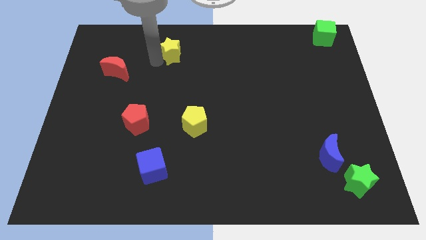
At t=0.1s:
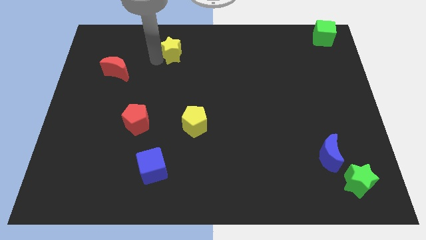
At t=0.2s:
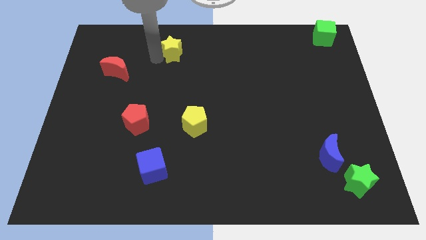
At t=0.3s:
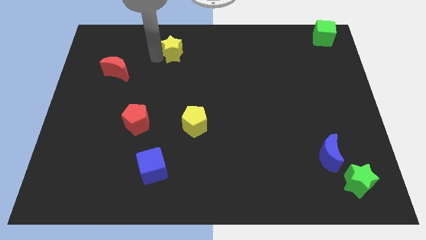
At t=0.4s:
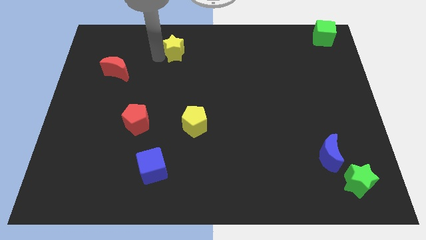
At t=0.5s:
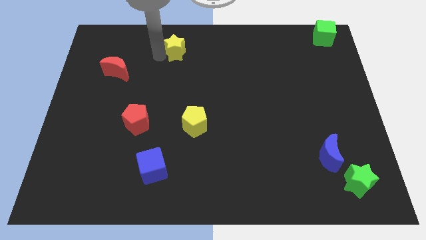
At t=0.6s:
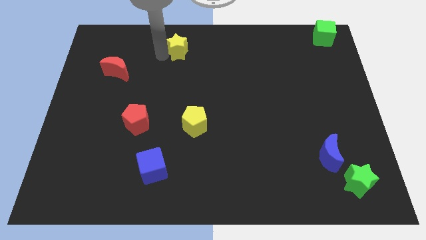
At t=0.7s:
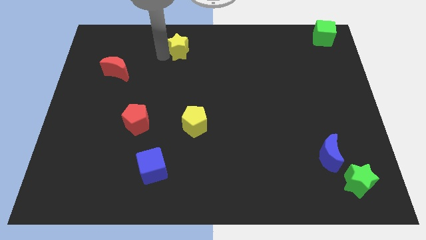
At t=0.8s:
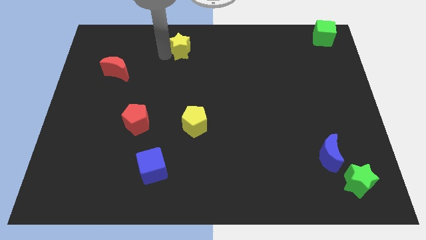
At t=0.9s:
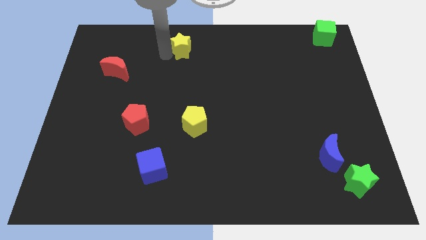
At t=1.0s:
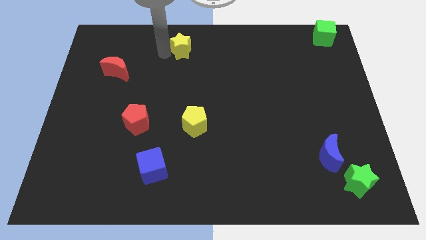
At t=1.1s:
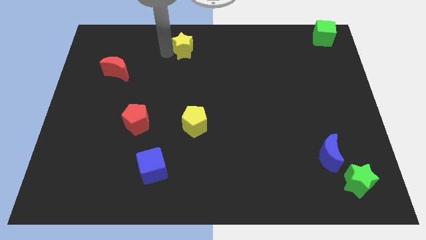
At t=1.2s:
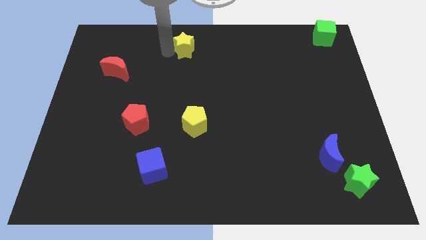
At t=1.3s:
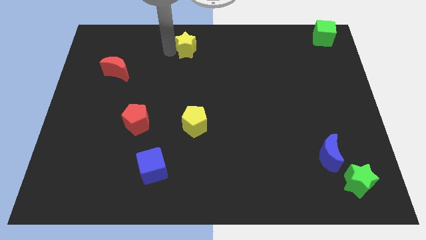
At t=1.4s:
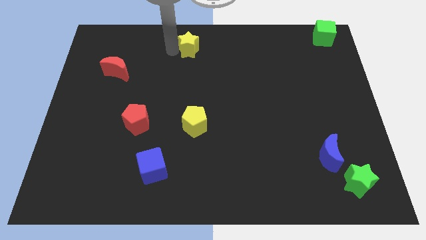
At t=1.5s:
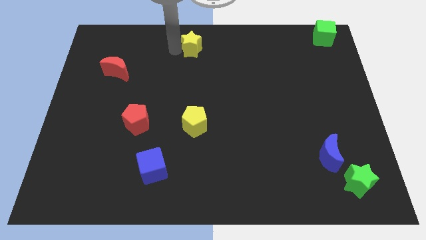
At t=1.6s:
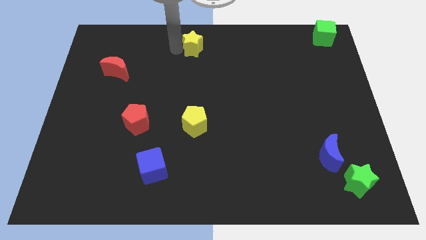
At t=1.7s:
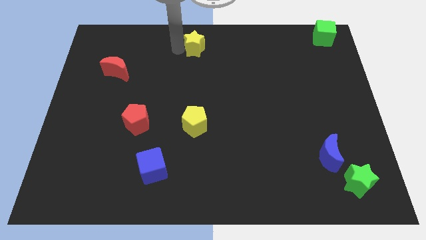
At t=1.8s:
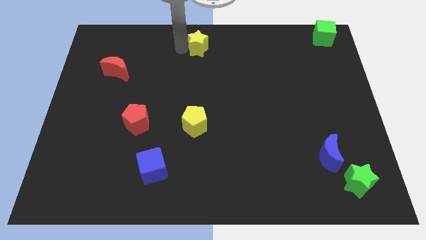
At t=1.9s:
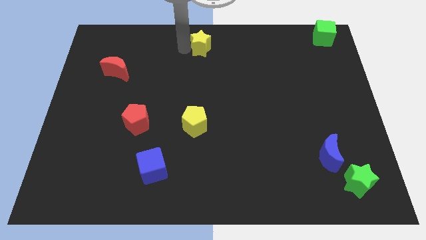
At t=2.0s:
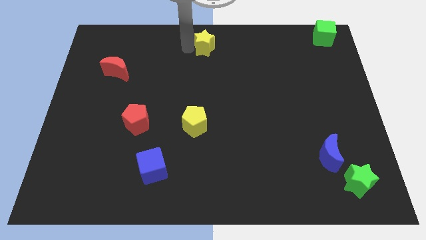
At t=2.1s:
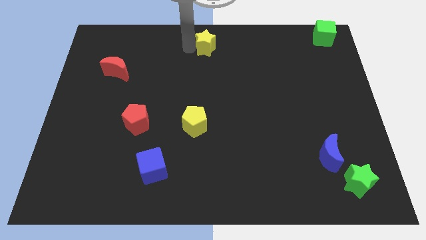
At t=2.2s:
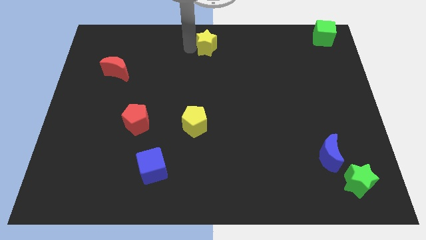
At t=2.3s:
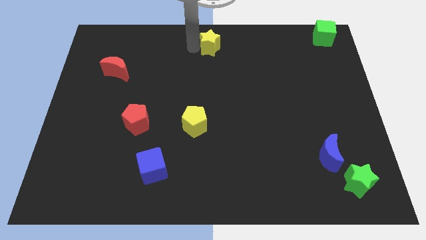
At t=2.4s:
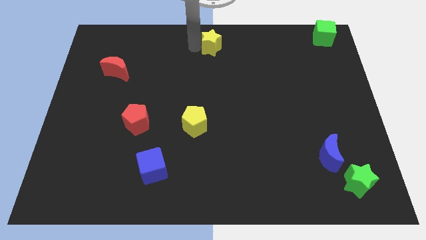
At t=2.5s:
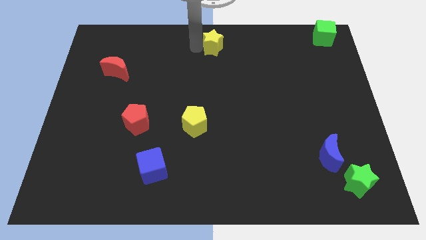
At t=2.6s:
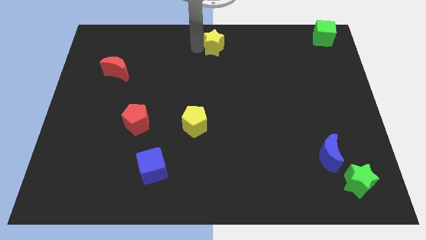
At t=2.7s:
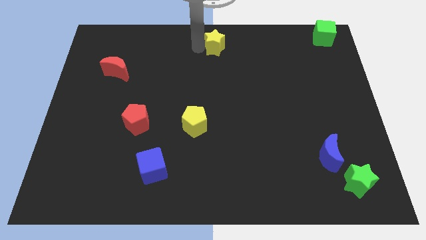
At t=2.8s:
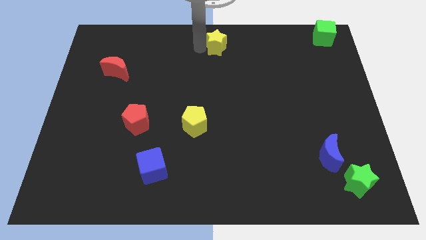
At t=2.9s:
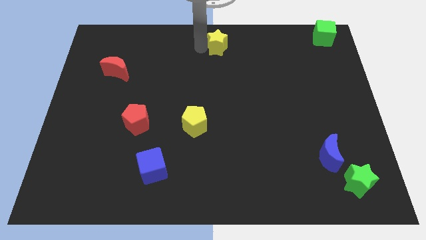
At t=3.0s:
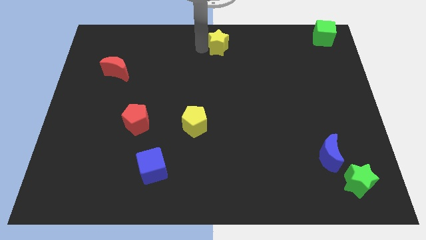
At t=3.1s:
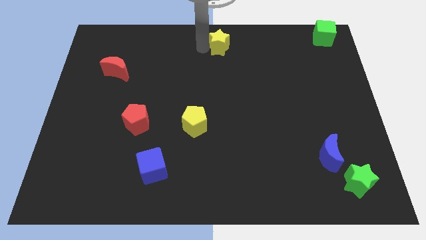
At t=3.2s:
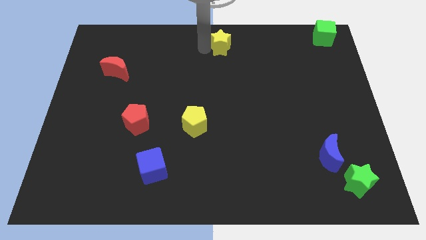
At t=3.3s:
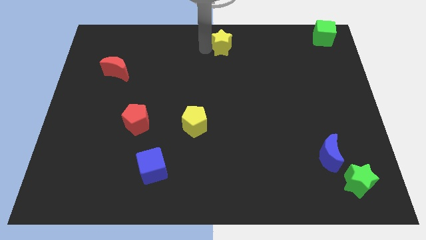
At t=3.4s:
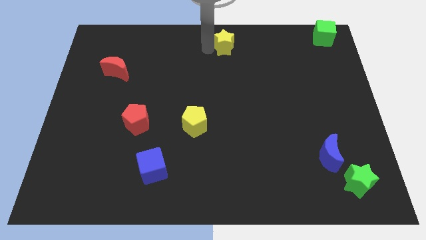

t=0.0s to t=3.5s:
push yellow star to the top middle of the board

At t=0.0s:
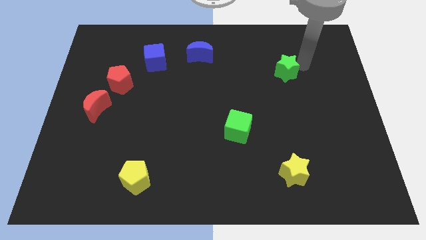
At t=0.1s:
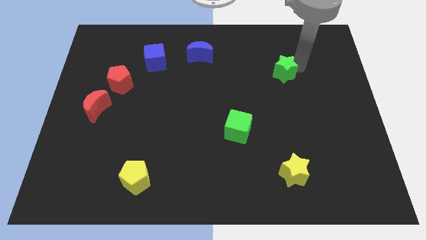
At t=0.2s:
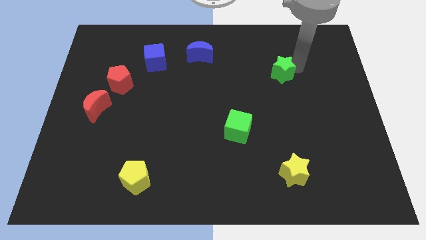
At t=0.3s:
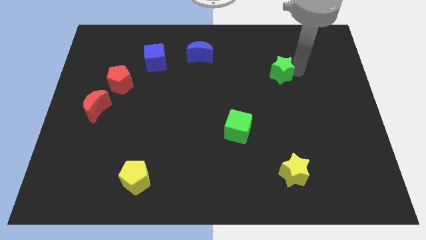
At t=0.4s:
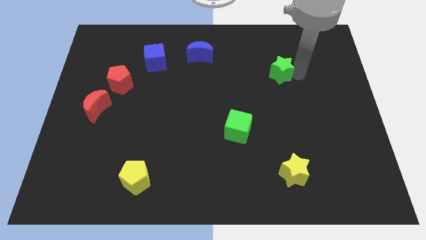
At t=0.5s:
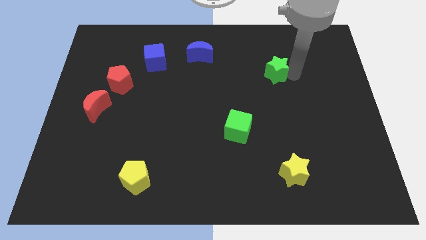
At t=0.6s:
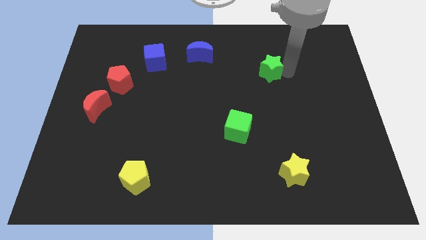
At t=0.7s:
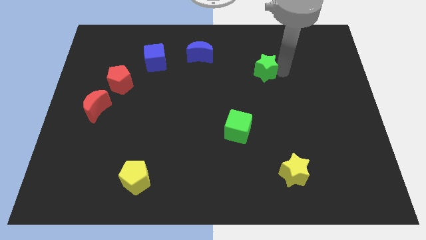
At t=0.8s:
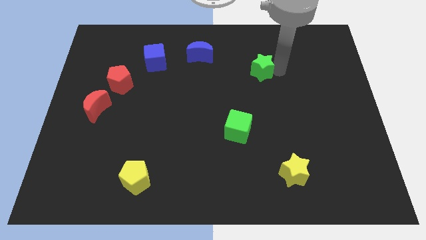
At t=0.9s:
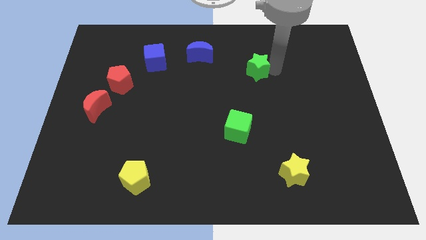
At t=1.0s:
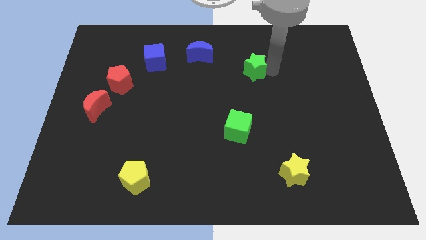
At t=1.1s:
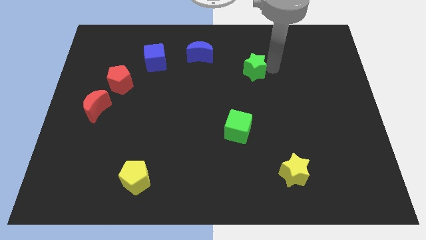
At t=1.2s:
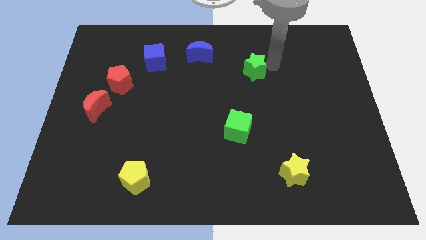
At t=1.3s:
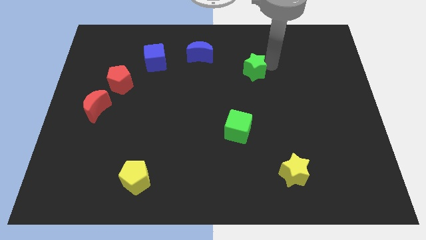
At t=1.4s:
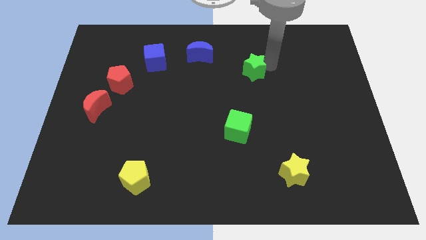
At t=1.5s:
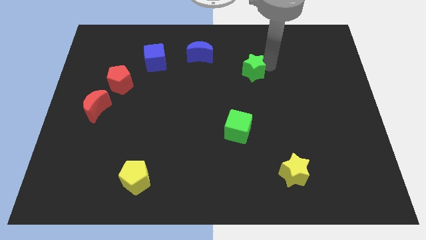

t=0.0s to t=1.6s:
move green star slightly to the center of the board

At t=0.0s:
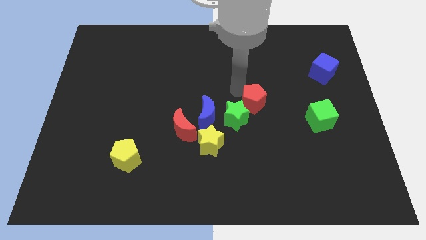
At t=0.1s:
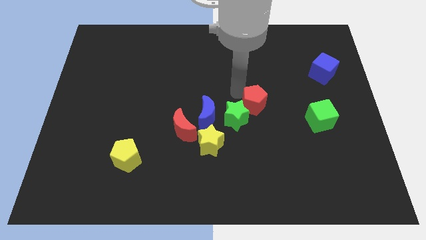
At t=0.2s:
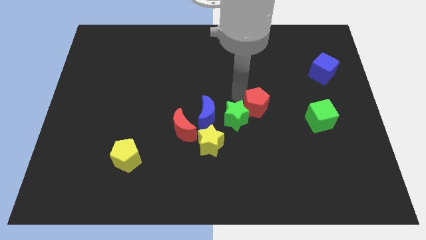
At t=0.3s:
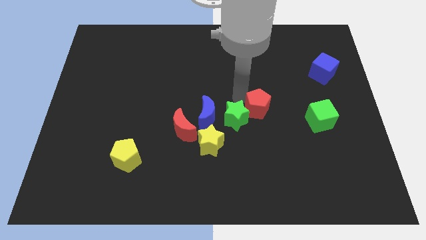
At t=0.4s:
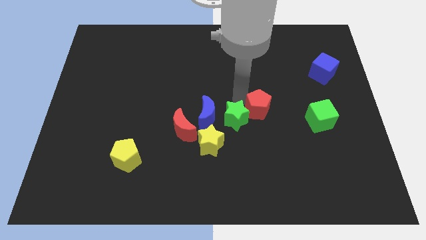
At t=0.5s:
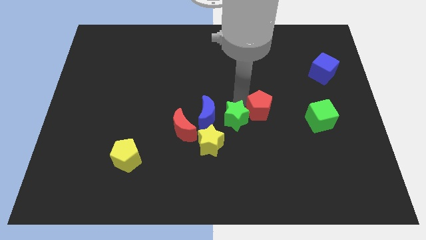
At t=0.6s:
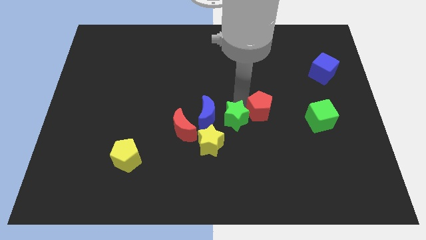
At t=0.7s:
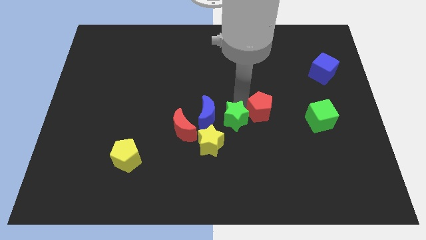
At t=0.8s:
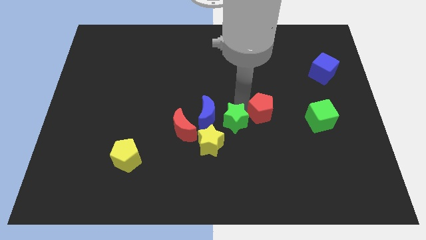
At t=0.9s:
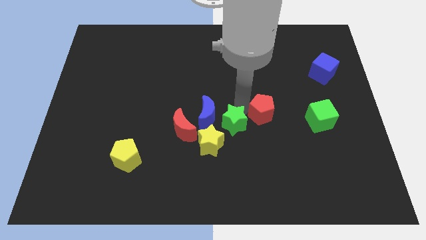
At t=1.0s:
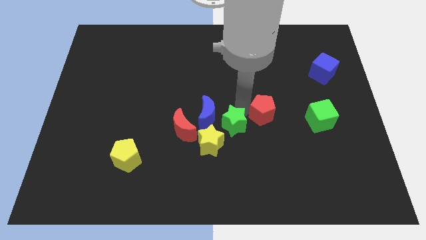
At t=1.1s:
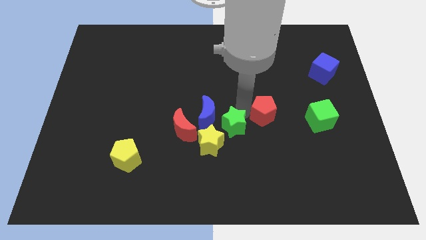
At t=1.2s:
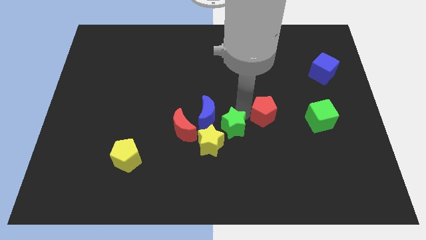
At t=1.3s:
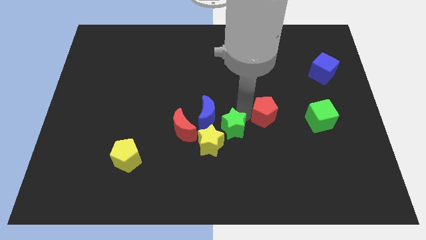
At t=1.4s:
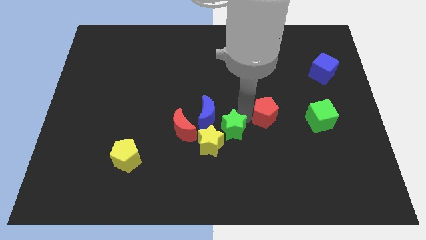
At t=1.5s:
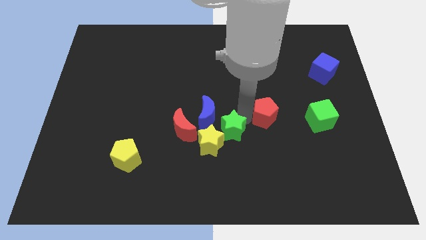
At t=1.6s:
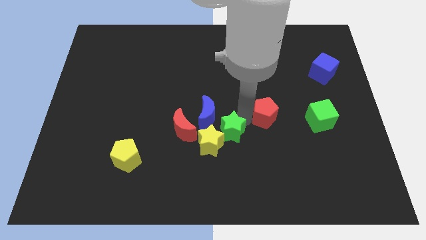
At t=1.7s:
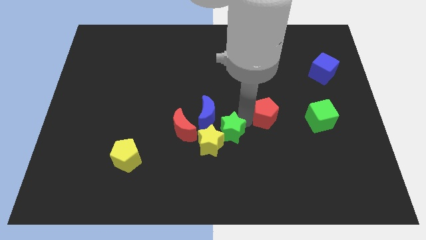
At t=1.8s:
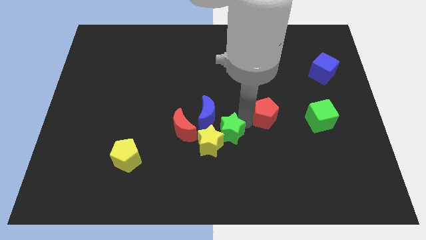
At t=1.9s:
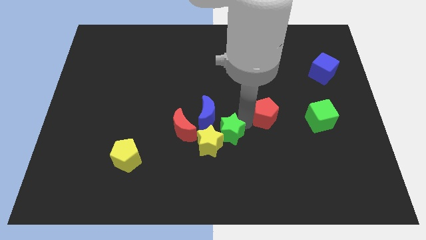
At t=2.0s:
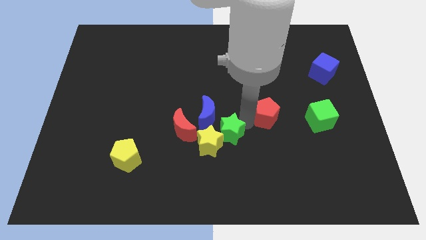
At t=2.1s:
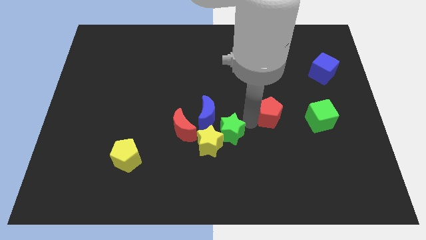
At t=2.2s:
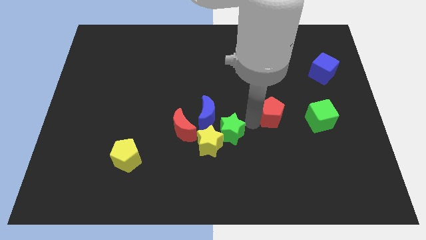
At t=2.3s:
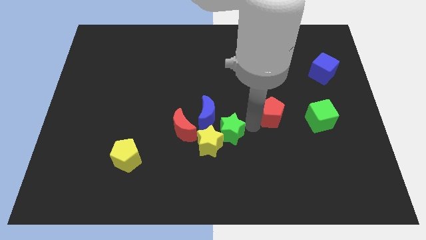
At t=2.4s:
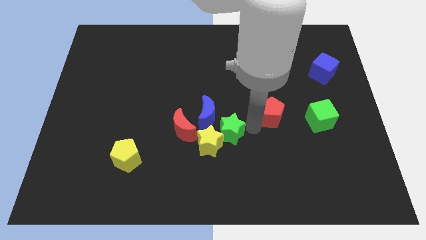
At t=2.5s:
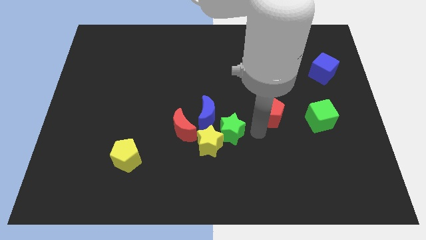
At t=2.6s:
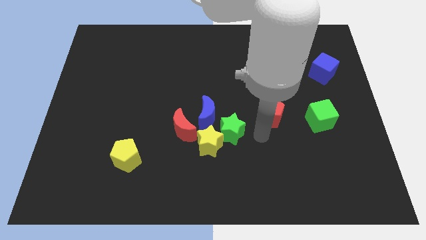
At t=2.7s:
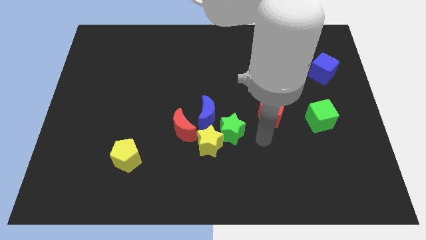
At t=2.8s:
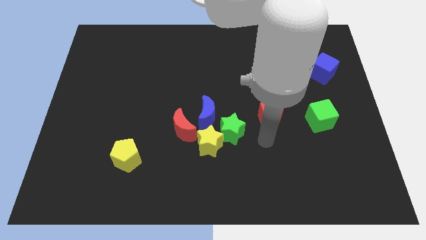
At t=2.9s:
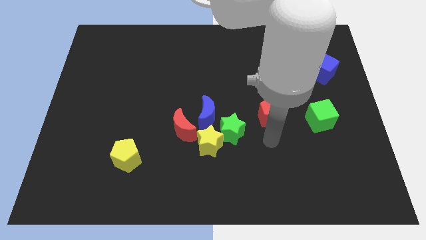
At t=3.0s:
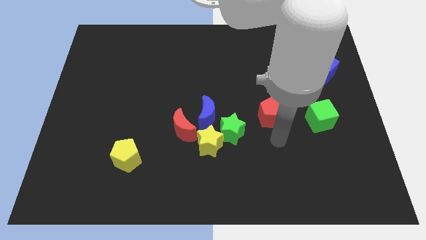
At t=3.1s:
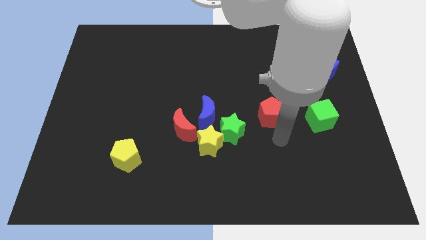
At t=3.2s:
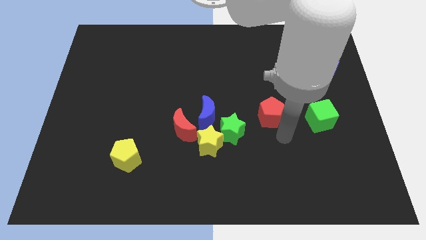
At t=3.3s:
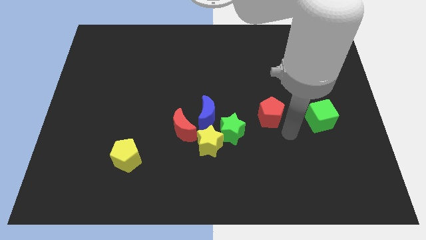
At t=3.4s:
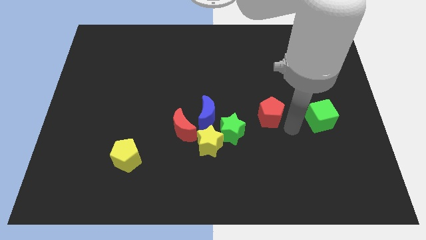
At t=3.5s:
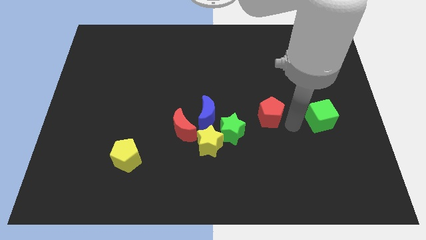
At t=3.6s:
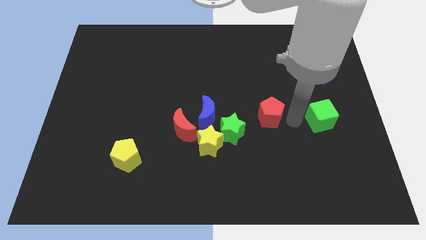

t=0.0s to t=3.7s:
separate the red pentagon and green star from each other

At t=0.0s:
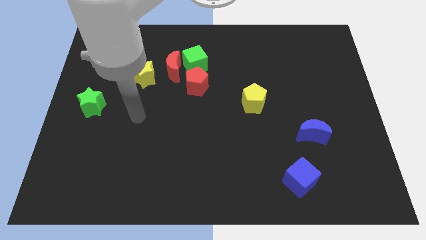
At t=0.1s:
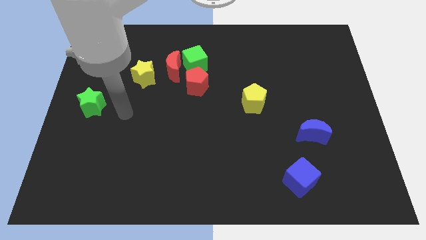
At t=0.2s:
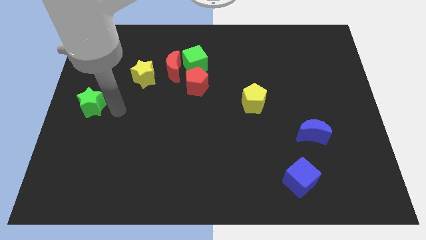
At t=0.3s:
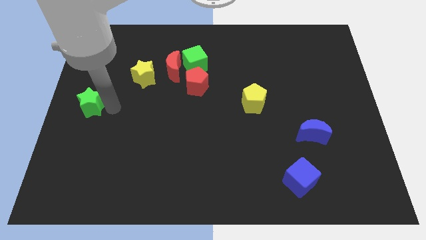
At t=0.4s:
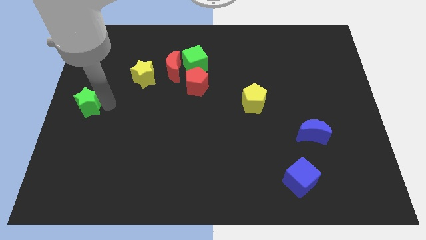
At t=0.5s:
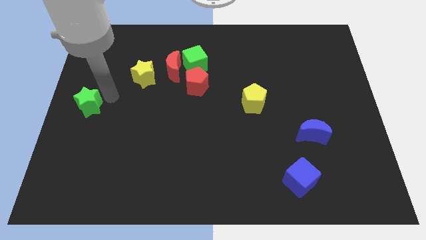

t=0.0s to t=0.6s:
slightly touch right to the green start
